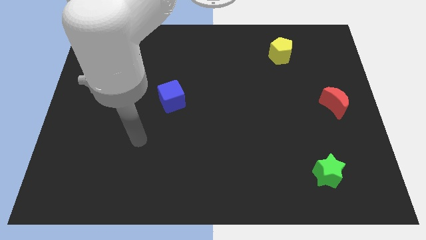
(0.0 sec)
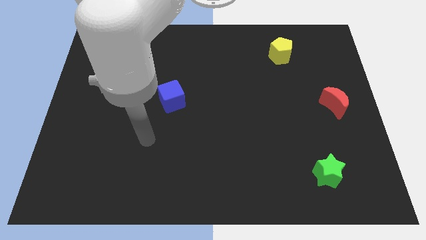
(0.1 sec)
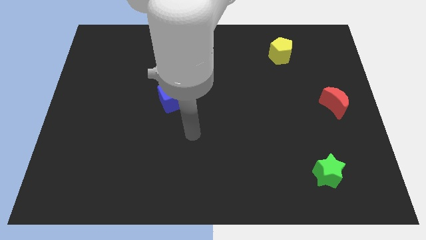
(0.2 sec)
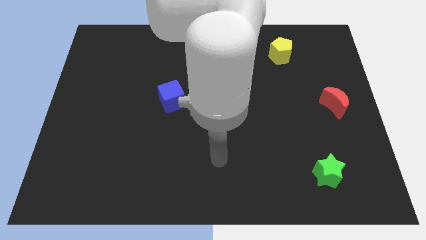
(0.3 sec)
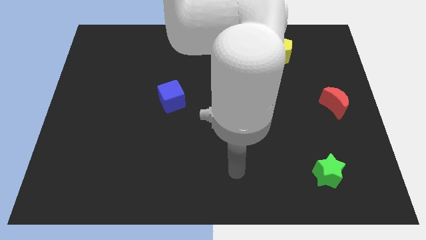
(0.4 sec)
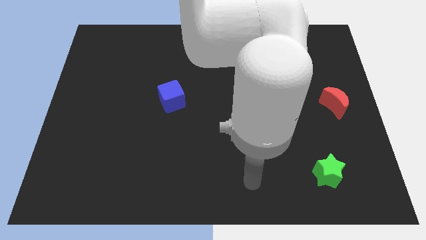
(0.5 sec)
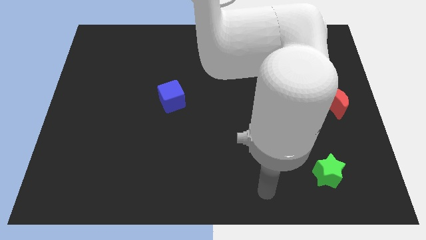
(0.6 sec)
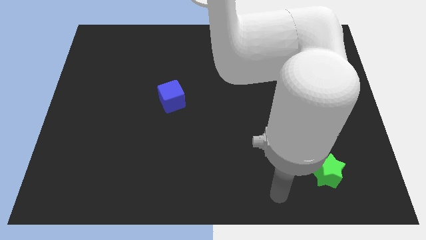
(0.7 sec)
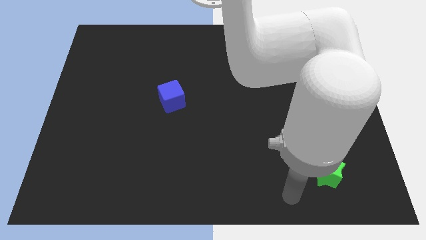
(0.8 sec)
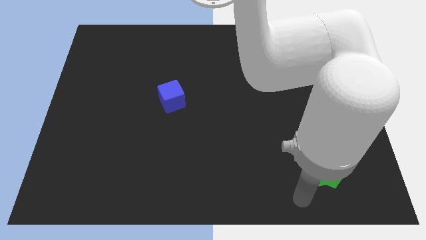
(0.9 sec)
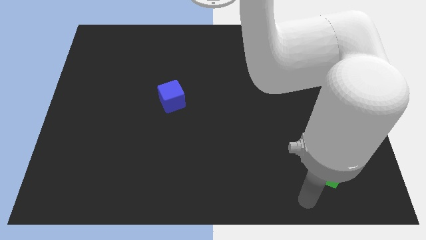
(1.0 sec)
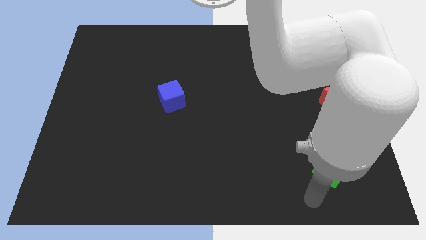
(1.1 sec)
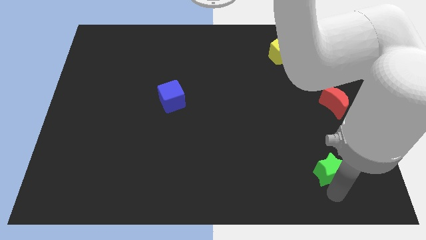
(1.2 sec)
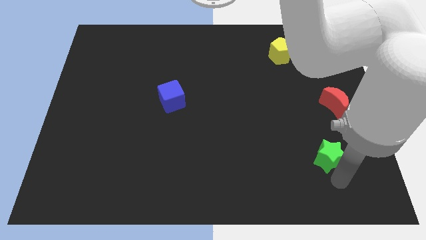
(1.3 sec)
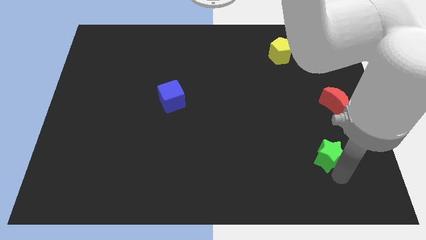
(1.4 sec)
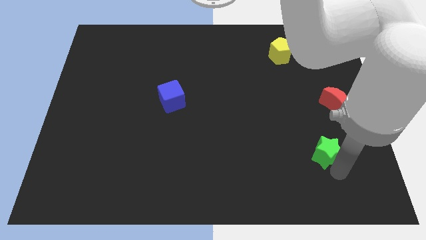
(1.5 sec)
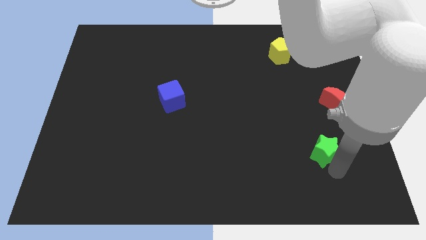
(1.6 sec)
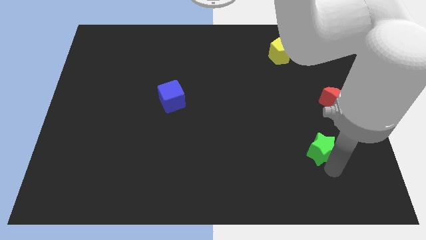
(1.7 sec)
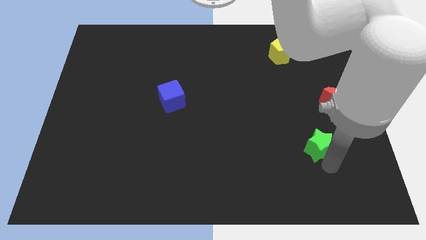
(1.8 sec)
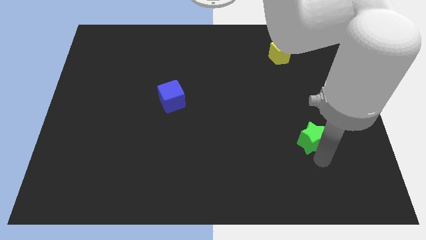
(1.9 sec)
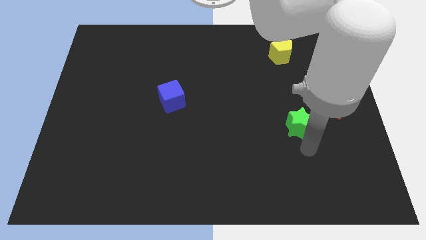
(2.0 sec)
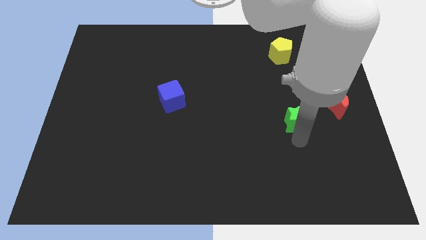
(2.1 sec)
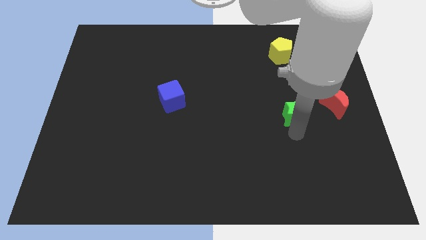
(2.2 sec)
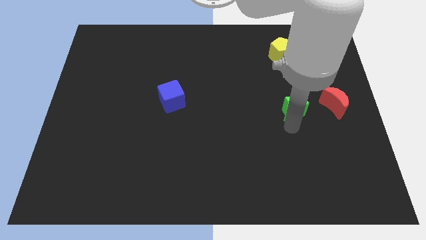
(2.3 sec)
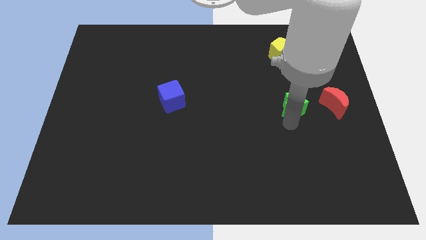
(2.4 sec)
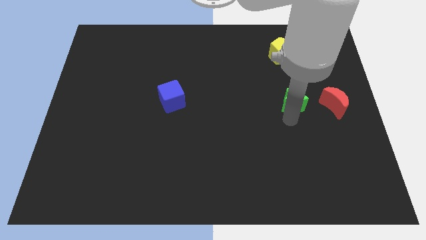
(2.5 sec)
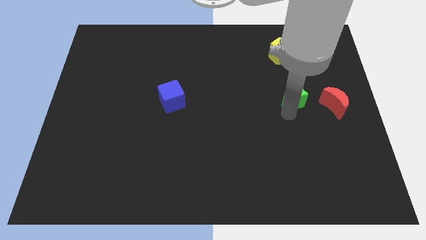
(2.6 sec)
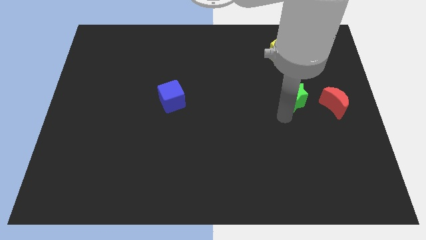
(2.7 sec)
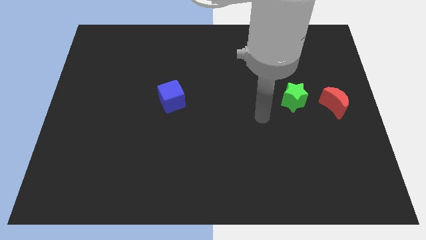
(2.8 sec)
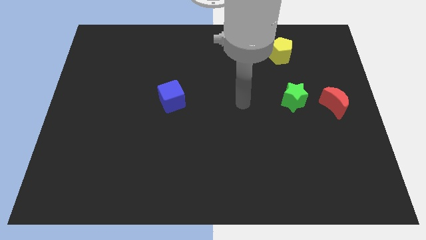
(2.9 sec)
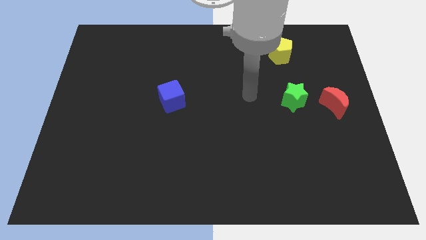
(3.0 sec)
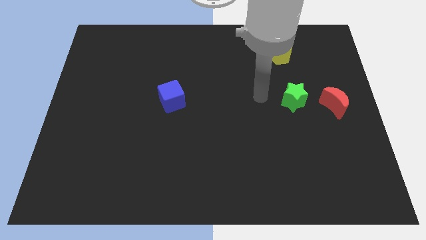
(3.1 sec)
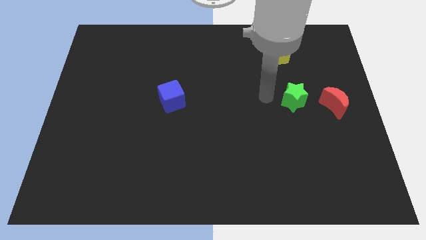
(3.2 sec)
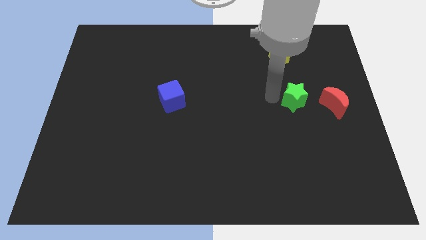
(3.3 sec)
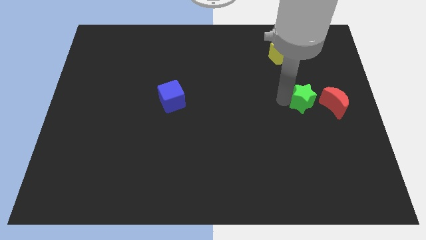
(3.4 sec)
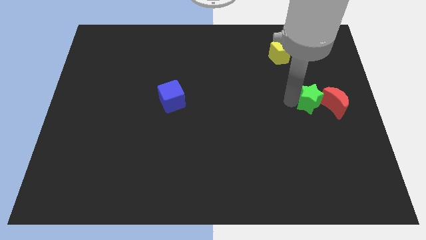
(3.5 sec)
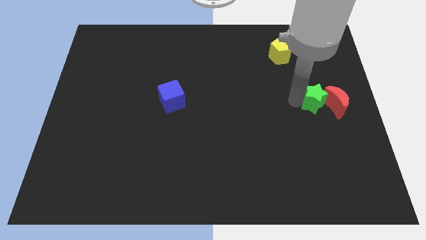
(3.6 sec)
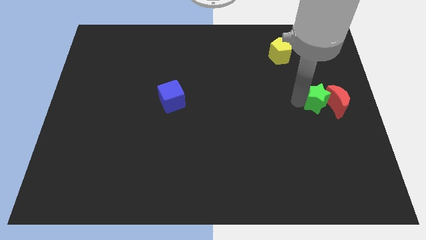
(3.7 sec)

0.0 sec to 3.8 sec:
put the star to the moon

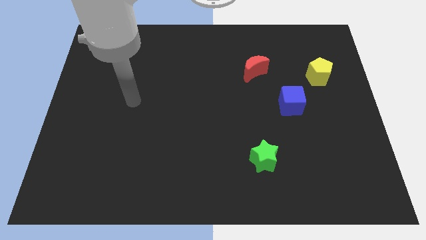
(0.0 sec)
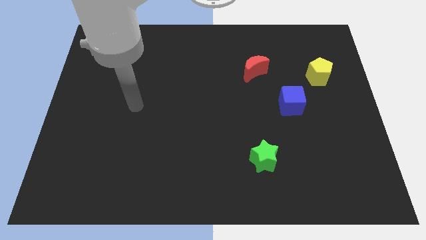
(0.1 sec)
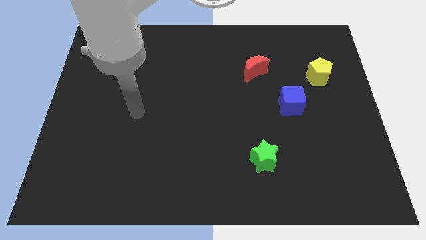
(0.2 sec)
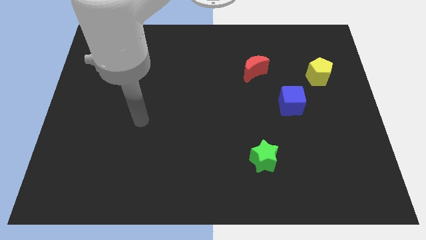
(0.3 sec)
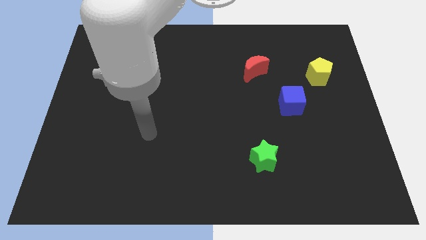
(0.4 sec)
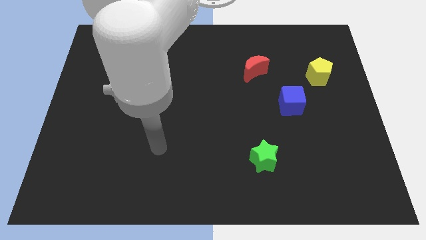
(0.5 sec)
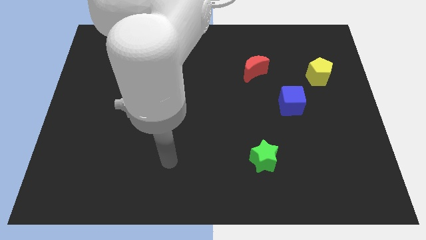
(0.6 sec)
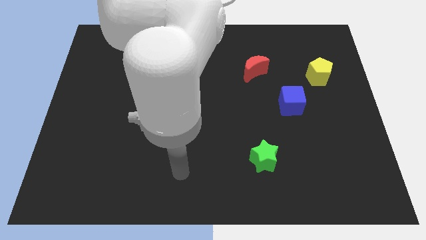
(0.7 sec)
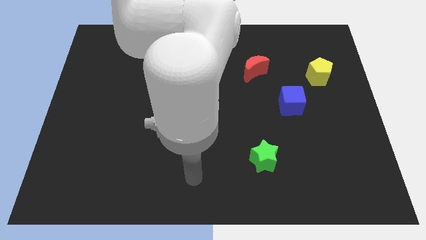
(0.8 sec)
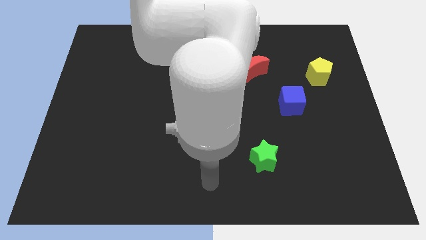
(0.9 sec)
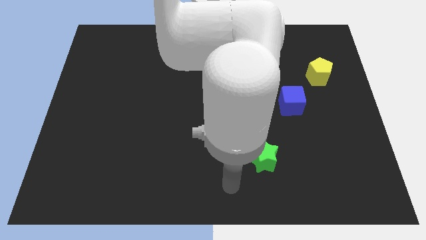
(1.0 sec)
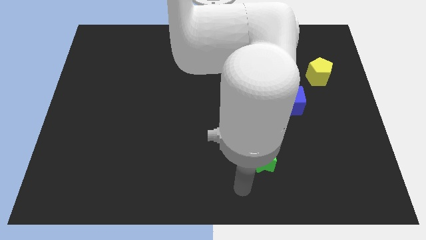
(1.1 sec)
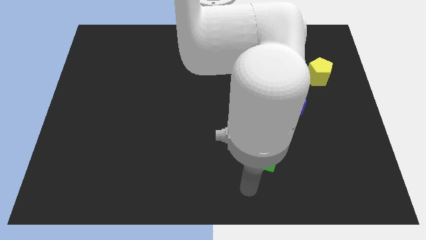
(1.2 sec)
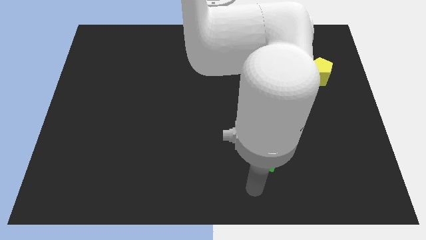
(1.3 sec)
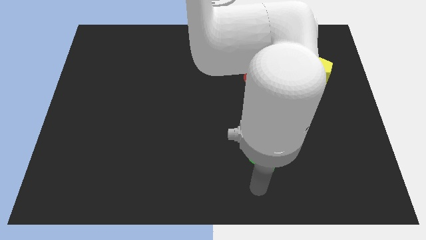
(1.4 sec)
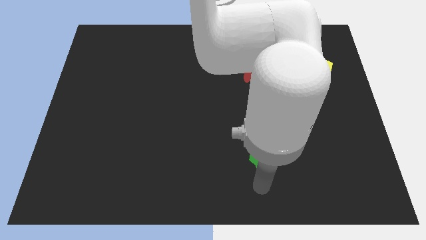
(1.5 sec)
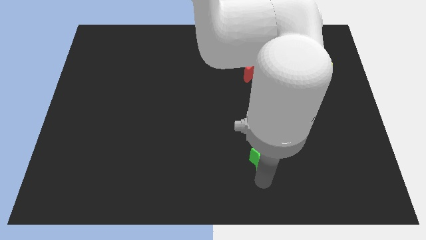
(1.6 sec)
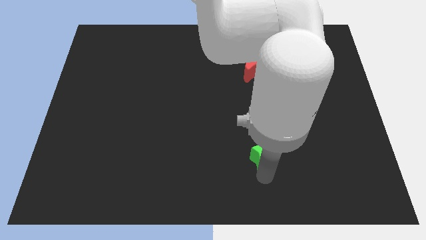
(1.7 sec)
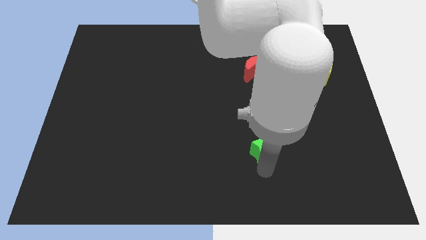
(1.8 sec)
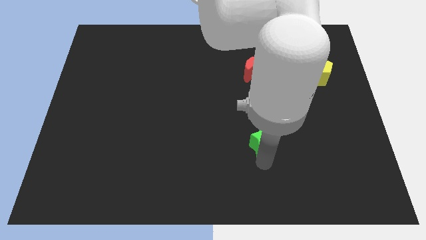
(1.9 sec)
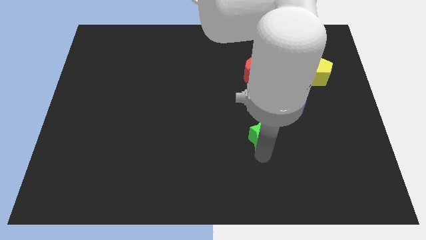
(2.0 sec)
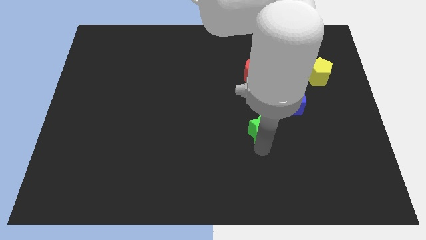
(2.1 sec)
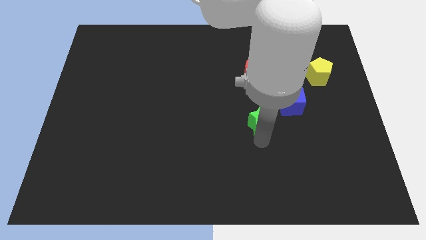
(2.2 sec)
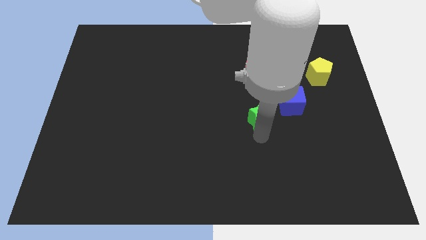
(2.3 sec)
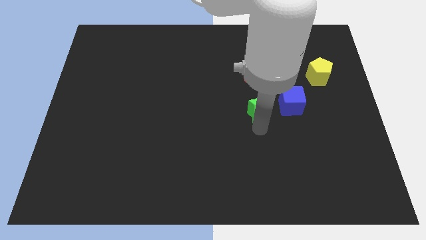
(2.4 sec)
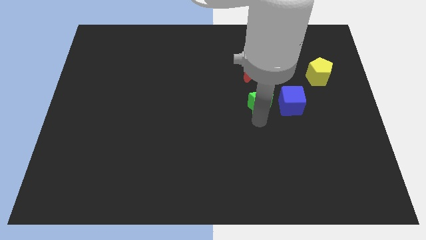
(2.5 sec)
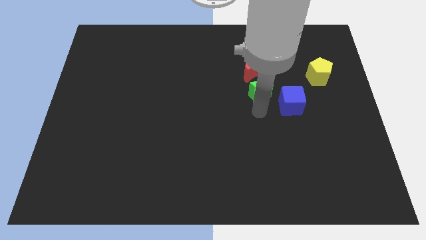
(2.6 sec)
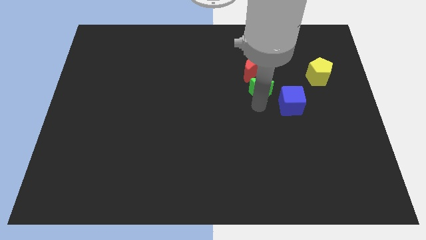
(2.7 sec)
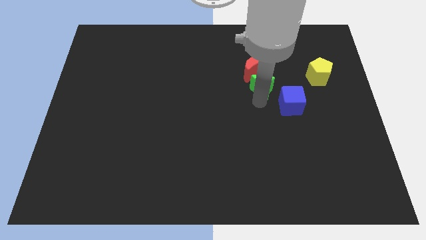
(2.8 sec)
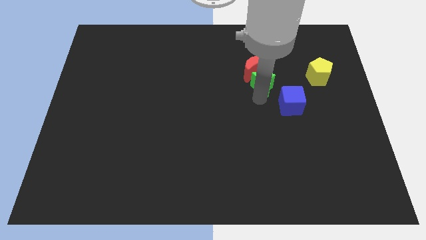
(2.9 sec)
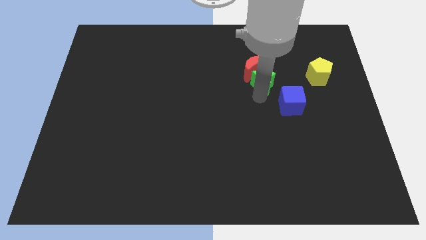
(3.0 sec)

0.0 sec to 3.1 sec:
move the star towards the red moon

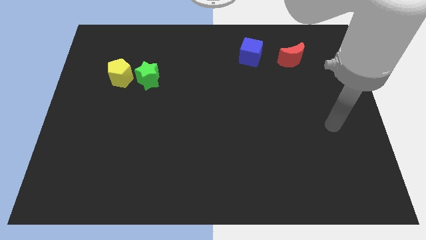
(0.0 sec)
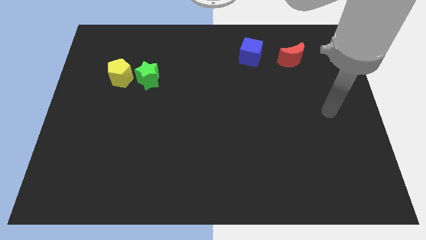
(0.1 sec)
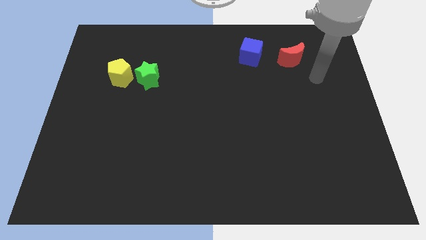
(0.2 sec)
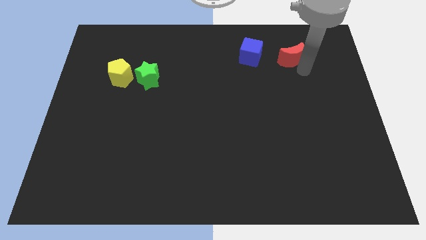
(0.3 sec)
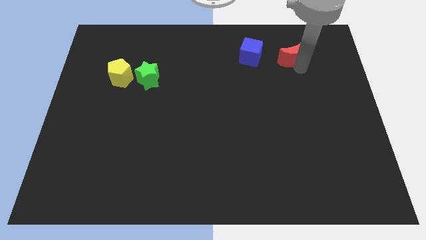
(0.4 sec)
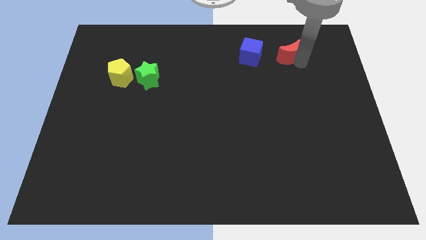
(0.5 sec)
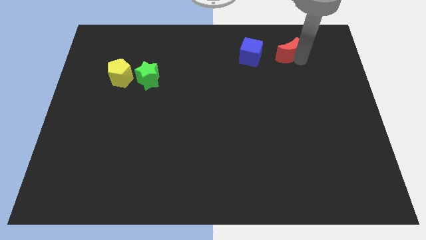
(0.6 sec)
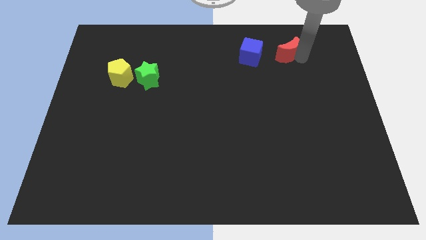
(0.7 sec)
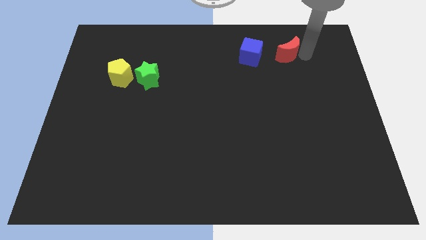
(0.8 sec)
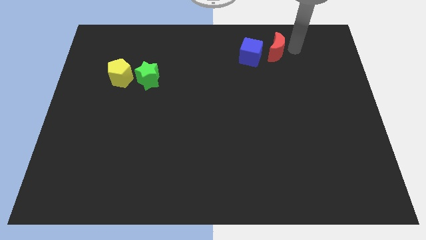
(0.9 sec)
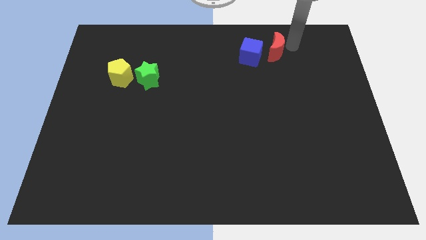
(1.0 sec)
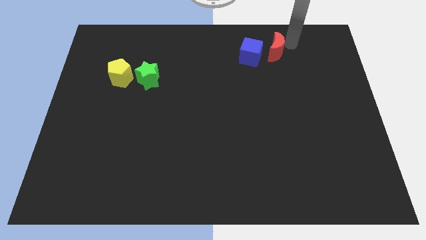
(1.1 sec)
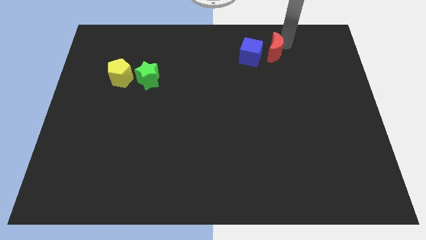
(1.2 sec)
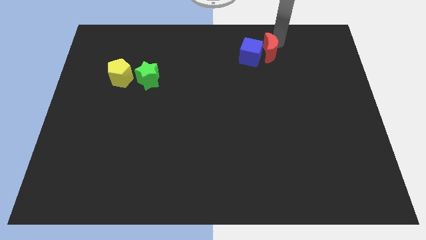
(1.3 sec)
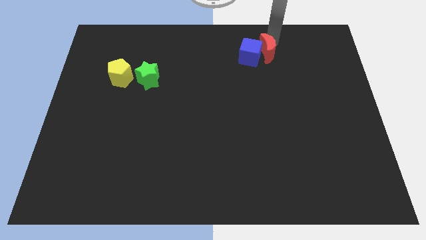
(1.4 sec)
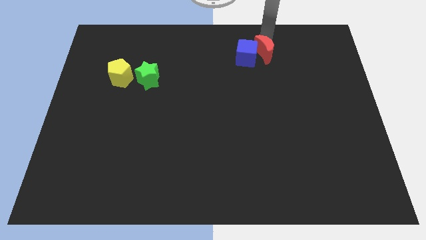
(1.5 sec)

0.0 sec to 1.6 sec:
put the moon close to the blue cube

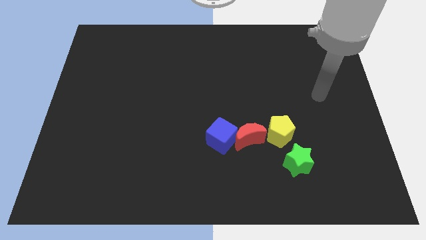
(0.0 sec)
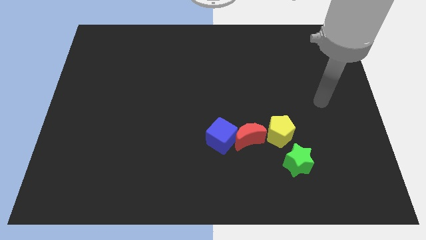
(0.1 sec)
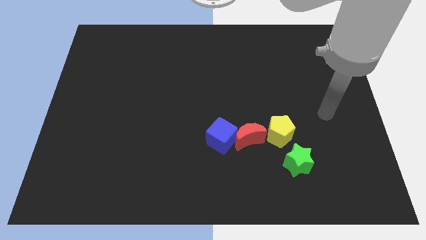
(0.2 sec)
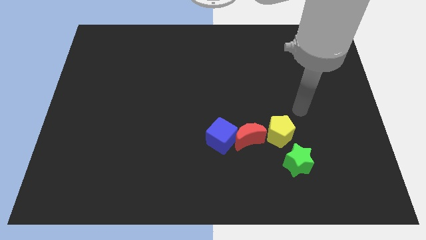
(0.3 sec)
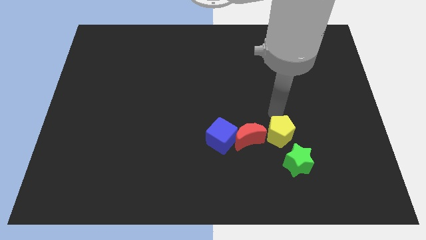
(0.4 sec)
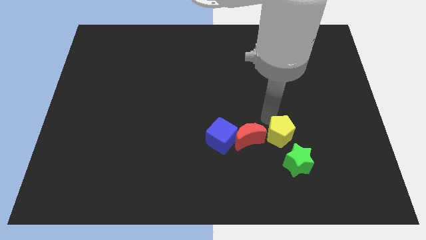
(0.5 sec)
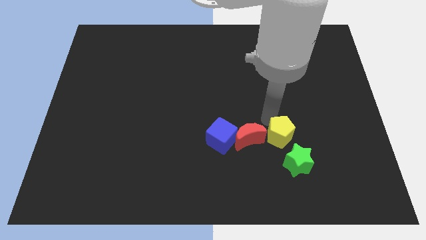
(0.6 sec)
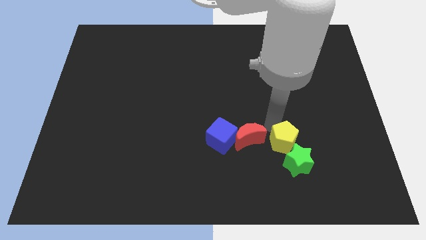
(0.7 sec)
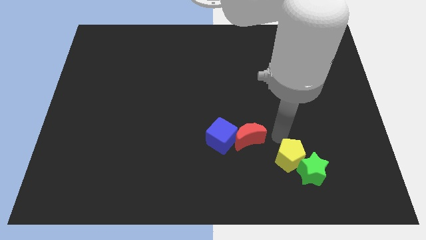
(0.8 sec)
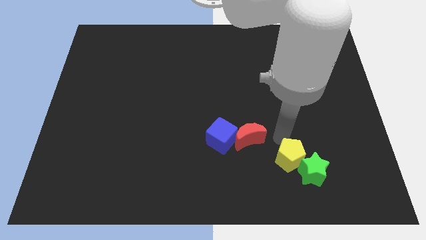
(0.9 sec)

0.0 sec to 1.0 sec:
move the yellow block close to the star
